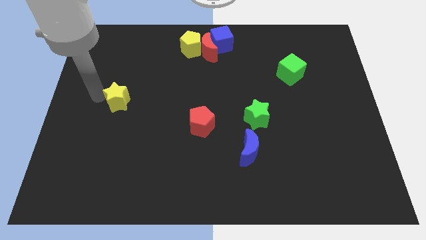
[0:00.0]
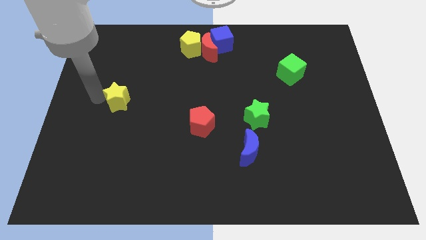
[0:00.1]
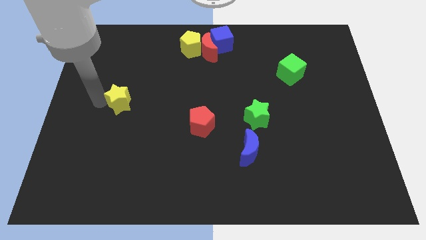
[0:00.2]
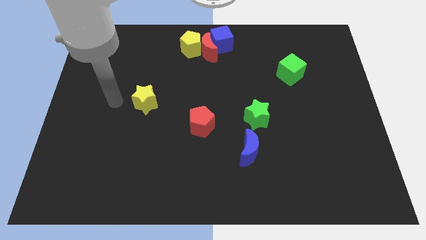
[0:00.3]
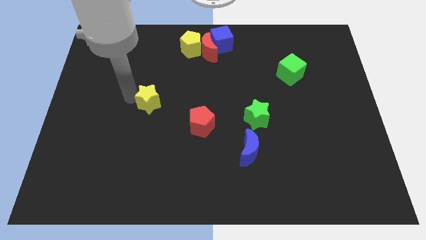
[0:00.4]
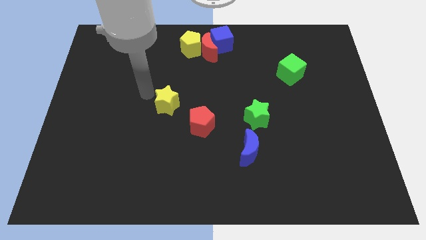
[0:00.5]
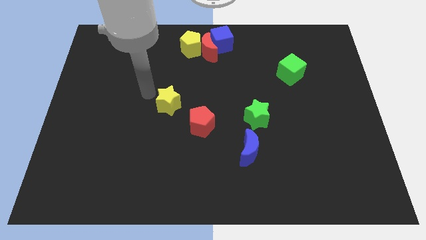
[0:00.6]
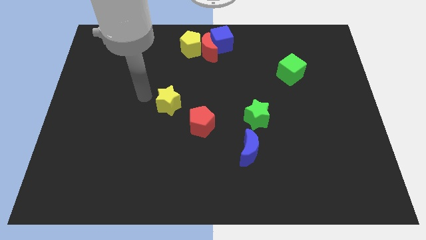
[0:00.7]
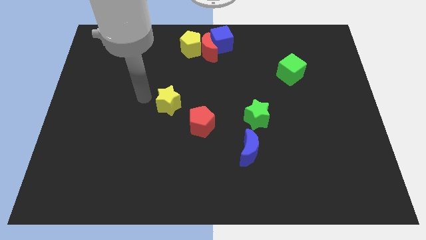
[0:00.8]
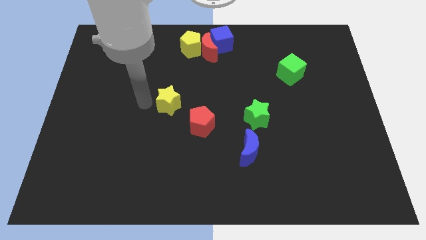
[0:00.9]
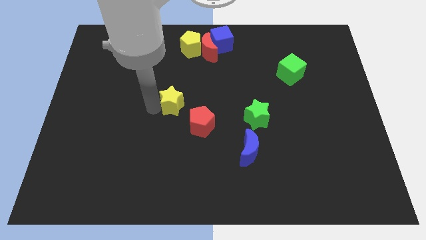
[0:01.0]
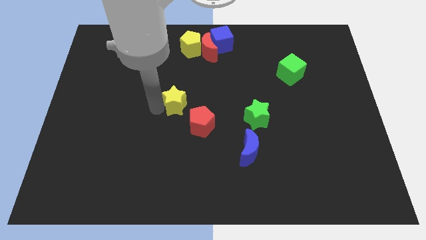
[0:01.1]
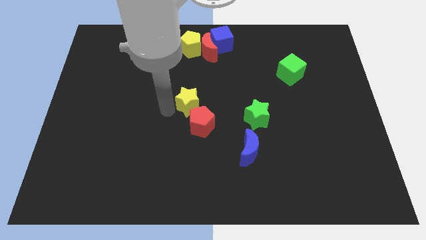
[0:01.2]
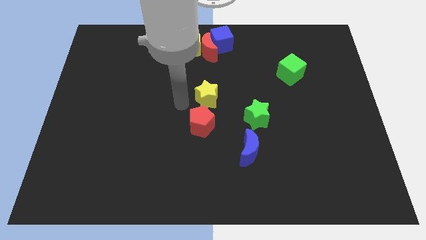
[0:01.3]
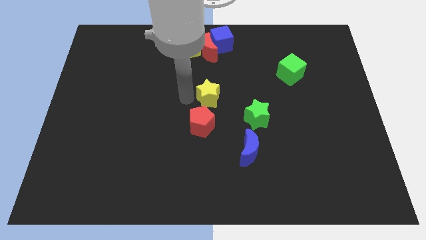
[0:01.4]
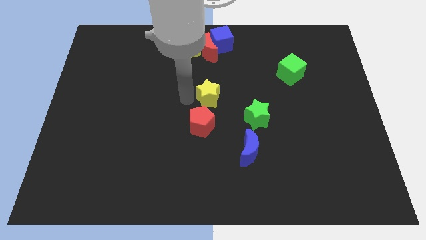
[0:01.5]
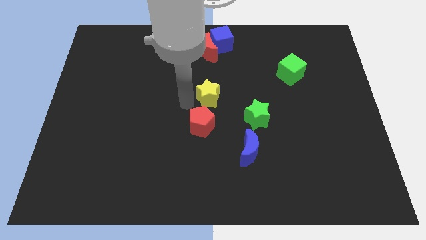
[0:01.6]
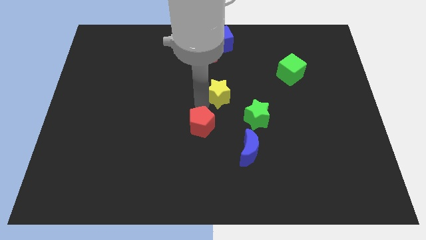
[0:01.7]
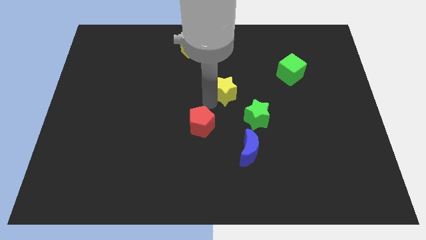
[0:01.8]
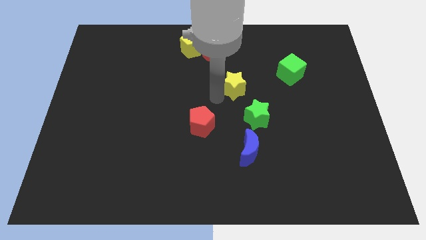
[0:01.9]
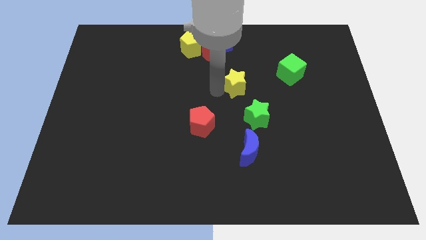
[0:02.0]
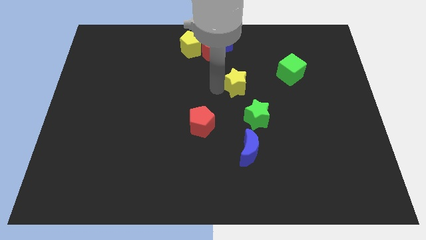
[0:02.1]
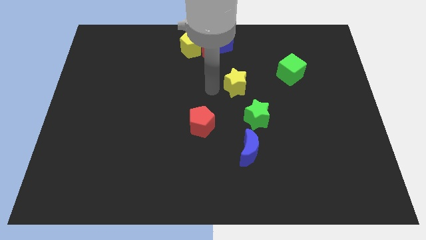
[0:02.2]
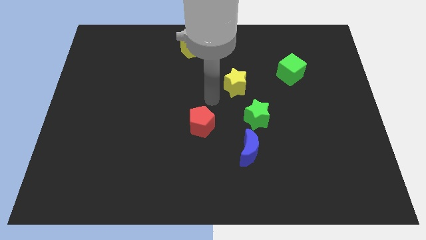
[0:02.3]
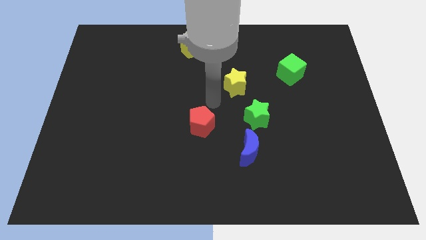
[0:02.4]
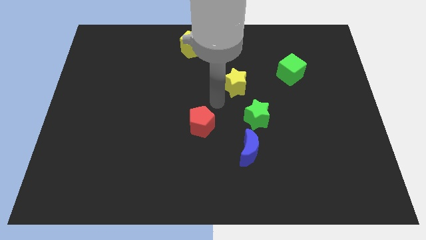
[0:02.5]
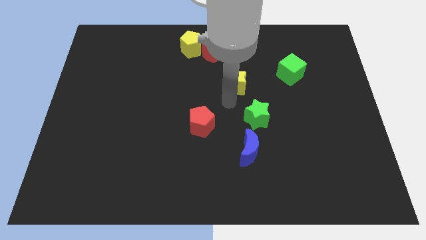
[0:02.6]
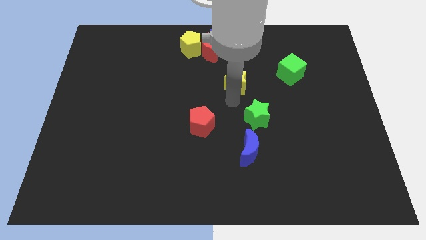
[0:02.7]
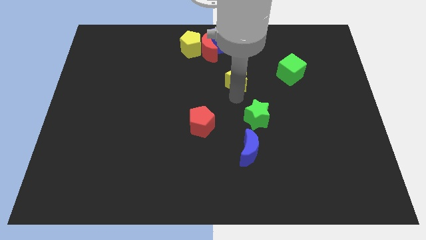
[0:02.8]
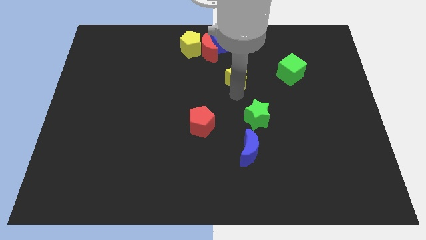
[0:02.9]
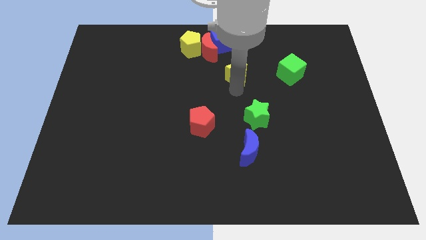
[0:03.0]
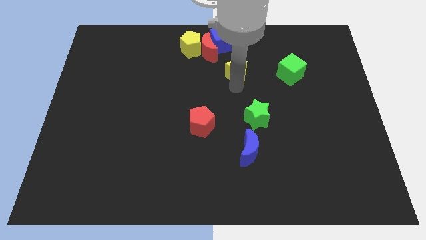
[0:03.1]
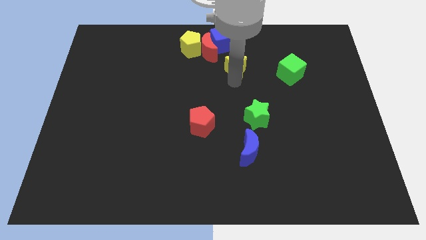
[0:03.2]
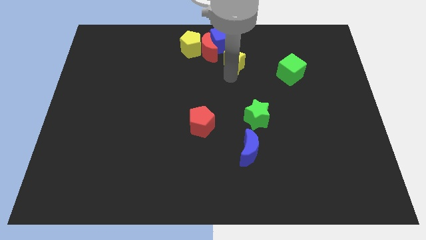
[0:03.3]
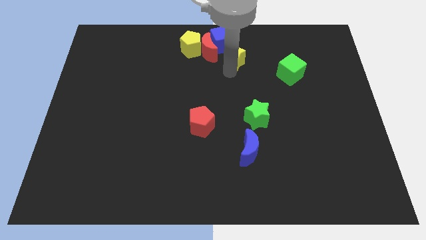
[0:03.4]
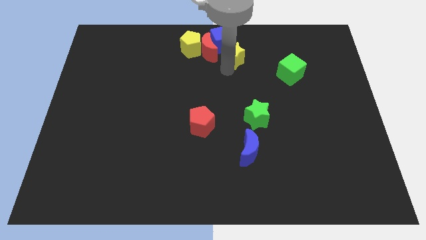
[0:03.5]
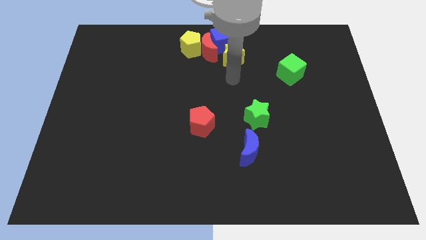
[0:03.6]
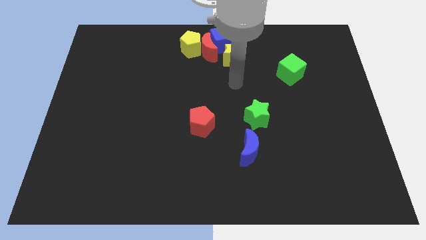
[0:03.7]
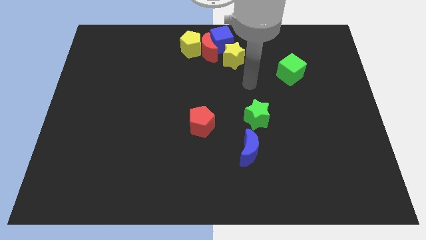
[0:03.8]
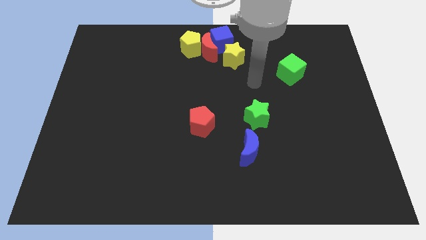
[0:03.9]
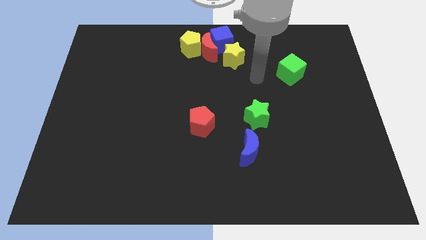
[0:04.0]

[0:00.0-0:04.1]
place the yellow star towards the bottom right side of the blue cube

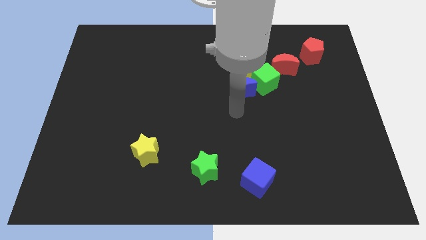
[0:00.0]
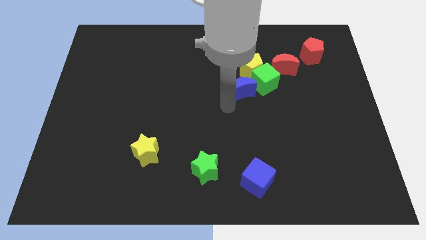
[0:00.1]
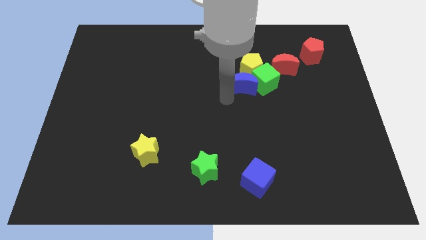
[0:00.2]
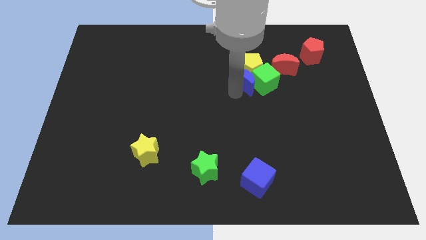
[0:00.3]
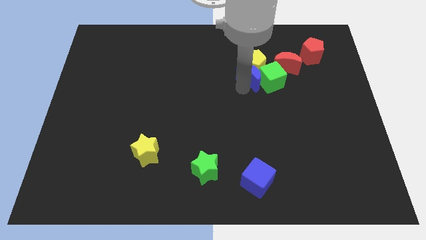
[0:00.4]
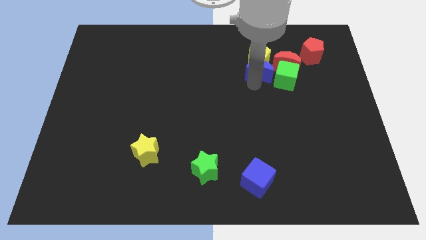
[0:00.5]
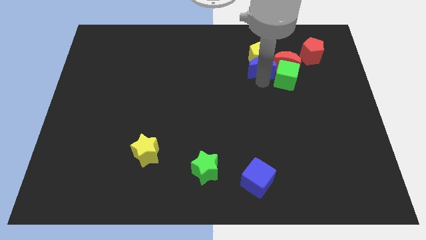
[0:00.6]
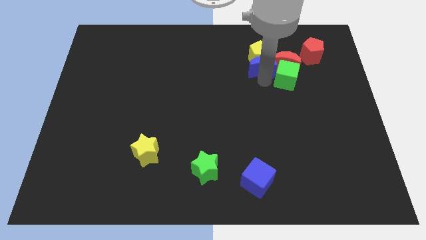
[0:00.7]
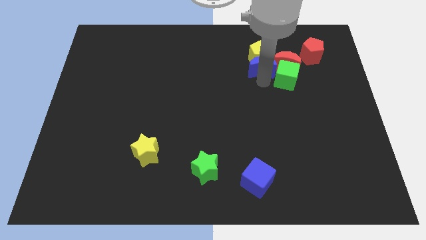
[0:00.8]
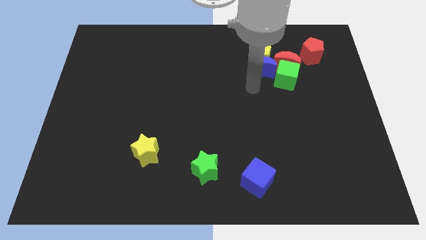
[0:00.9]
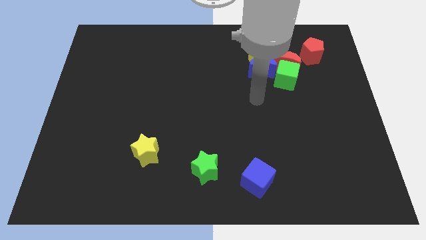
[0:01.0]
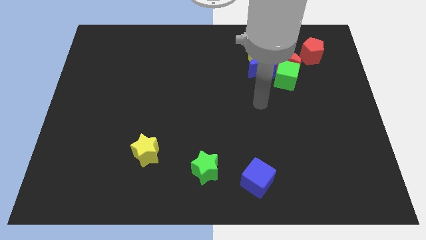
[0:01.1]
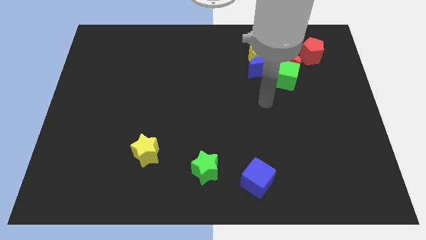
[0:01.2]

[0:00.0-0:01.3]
push blue crescent into the red crescent

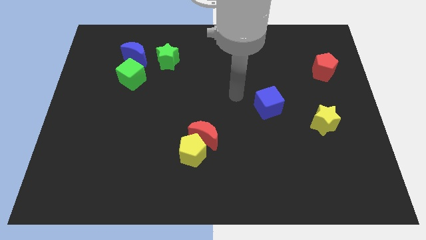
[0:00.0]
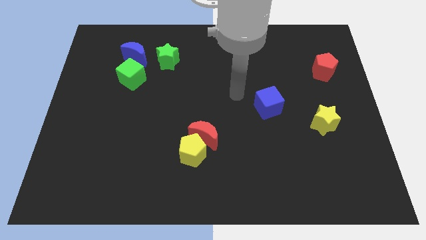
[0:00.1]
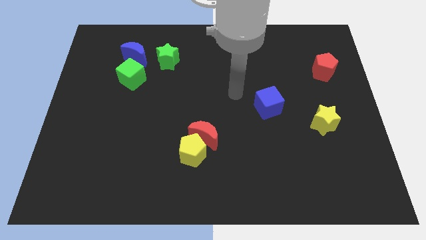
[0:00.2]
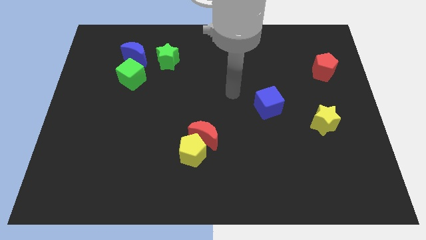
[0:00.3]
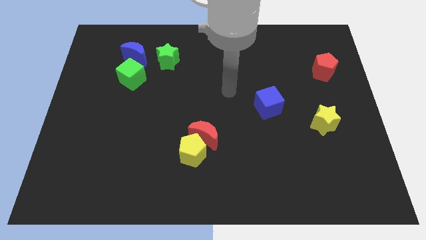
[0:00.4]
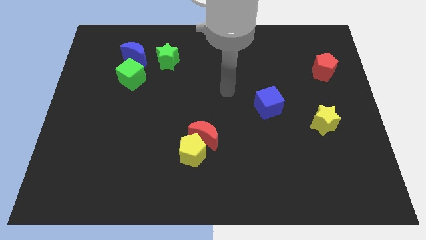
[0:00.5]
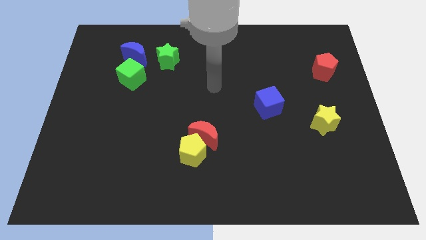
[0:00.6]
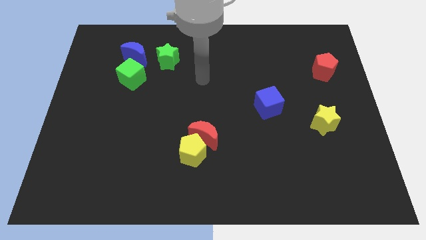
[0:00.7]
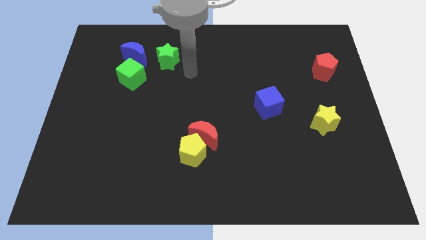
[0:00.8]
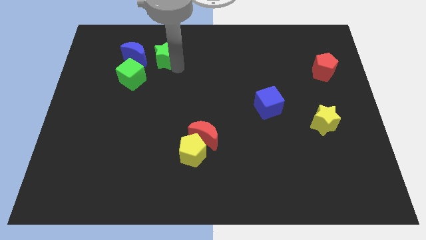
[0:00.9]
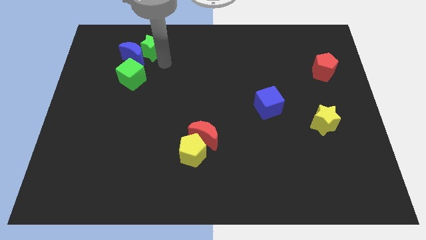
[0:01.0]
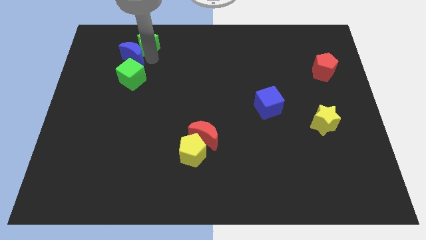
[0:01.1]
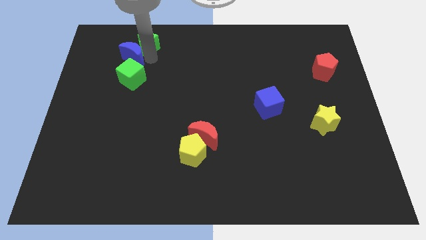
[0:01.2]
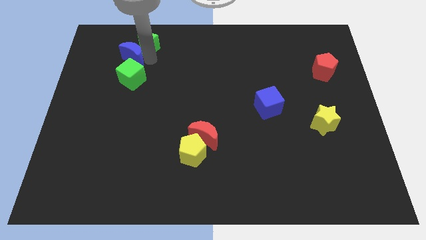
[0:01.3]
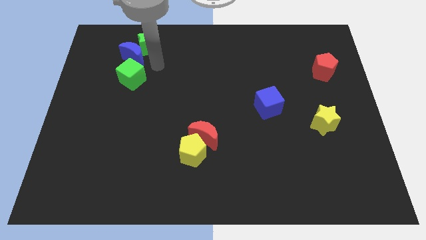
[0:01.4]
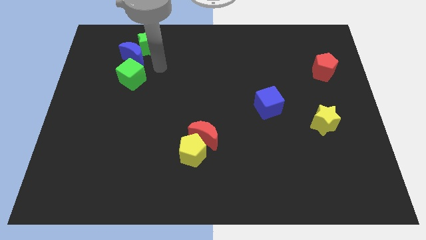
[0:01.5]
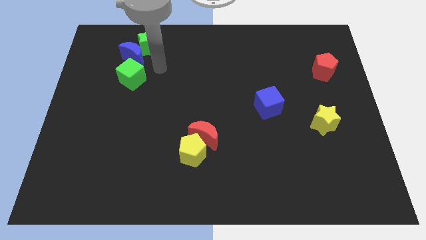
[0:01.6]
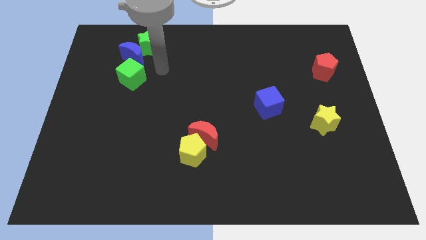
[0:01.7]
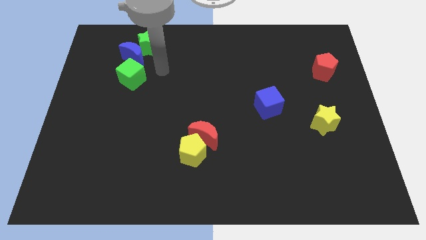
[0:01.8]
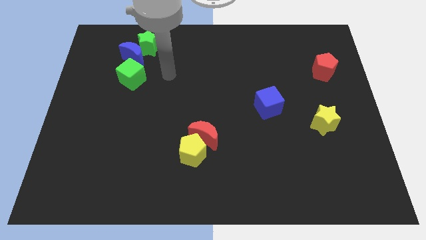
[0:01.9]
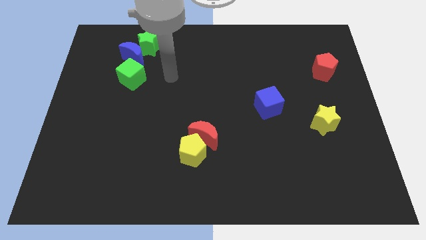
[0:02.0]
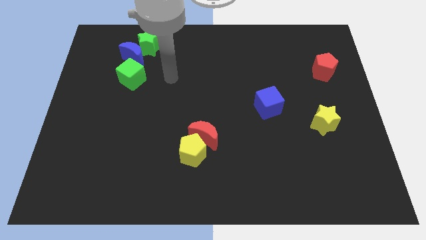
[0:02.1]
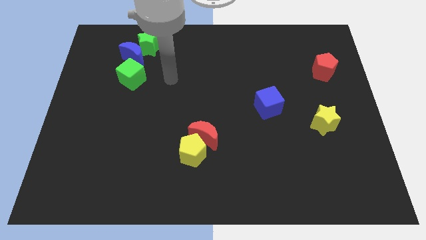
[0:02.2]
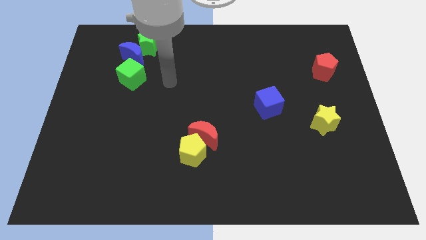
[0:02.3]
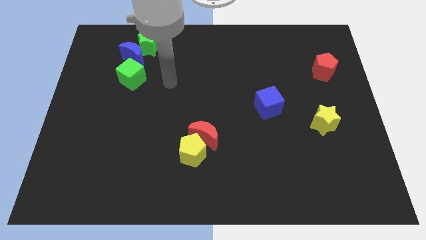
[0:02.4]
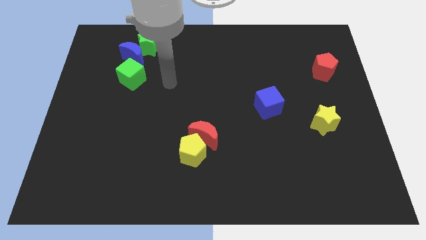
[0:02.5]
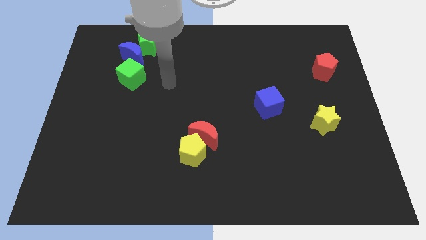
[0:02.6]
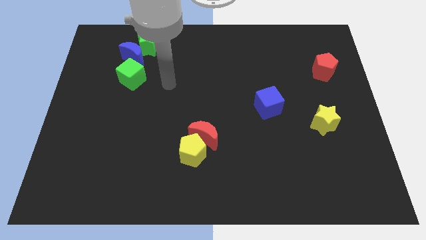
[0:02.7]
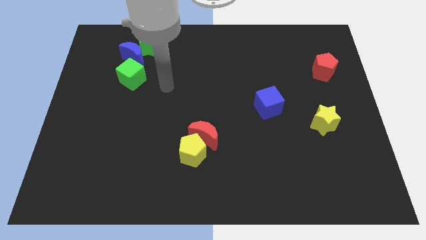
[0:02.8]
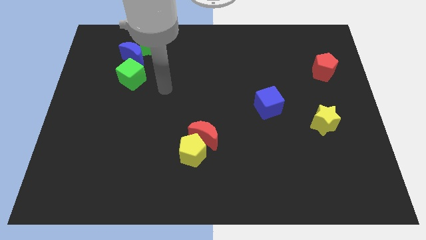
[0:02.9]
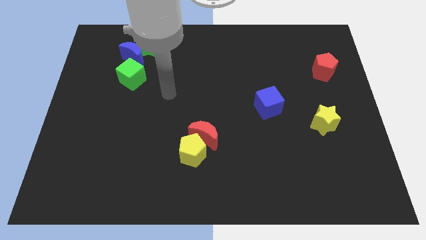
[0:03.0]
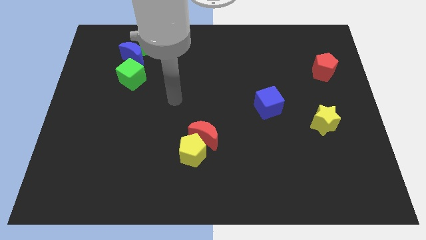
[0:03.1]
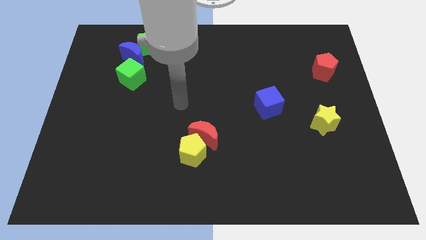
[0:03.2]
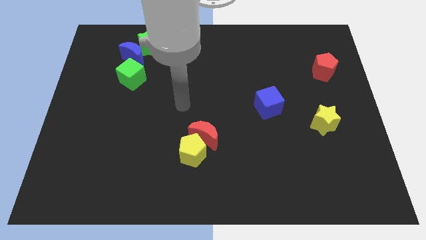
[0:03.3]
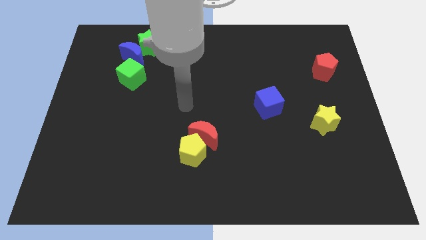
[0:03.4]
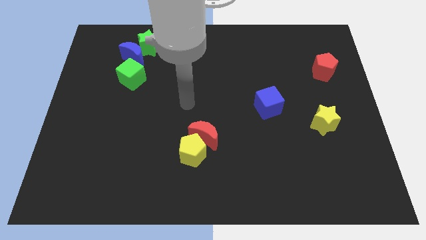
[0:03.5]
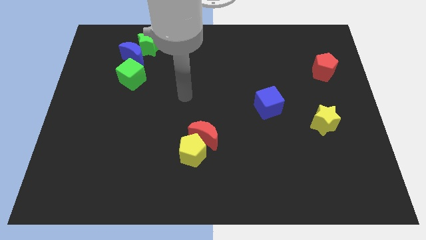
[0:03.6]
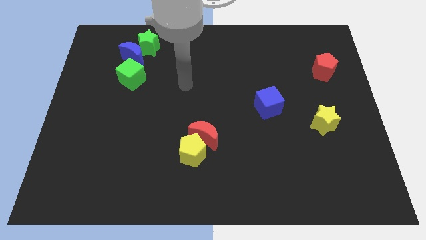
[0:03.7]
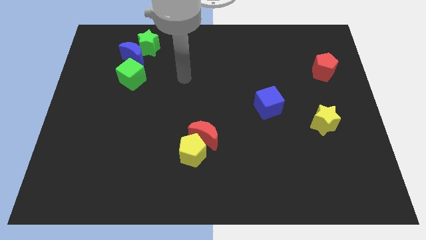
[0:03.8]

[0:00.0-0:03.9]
push the green star slightly upwards
